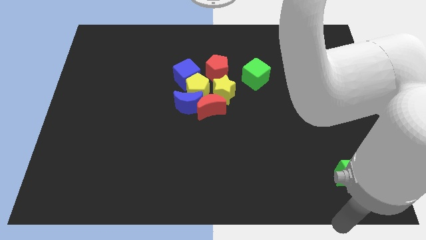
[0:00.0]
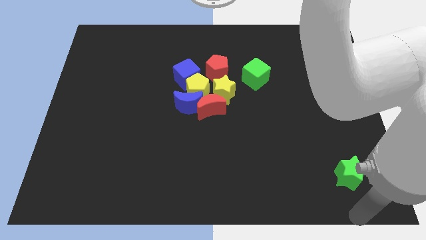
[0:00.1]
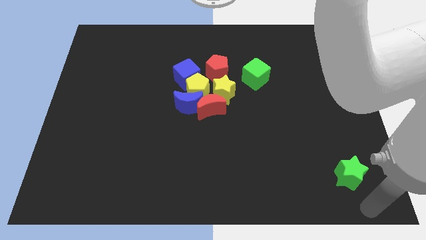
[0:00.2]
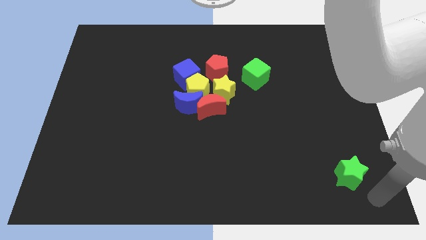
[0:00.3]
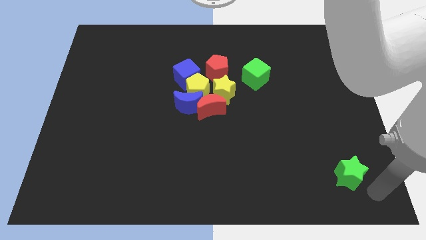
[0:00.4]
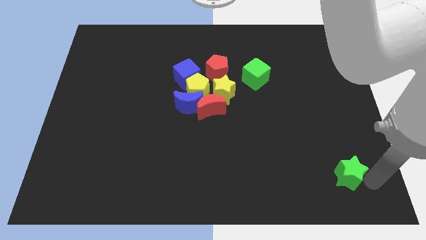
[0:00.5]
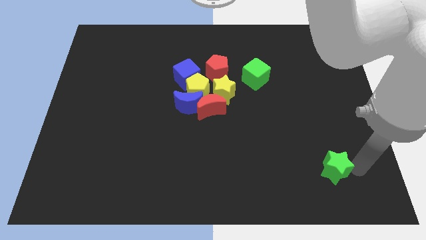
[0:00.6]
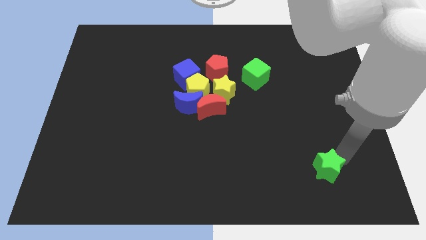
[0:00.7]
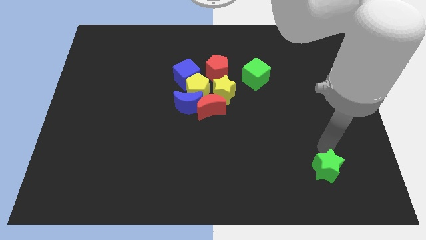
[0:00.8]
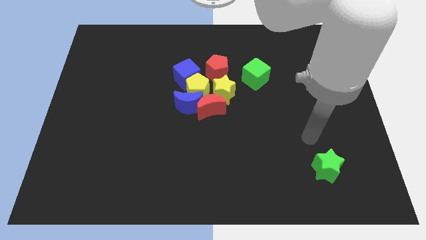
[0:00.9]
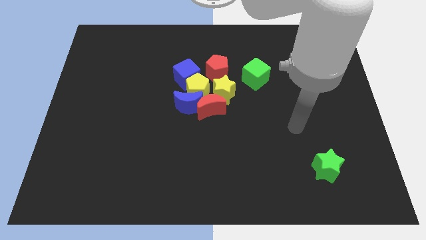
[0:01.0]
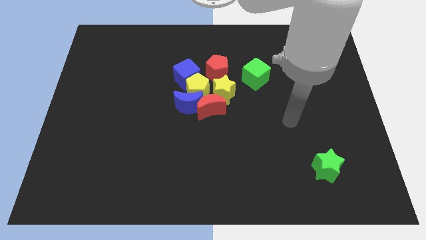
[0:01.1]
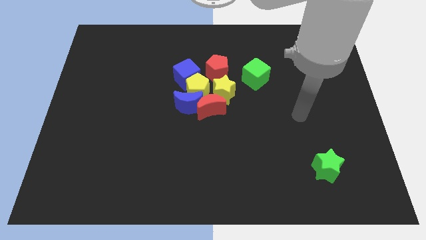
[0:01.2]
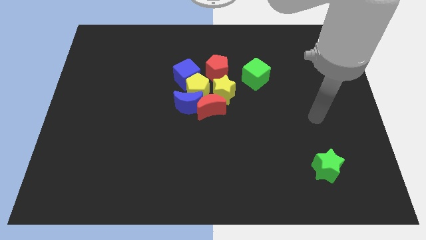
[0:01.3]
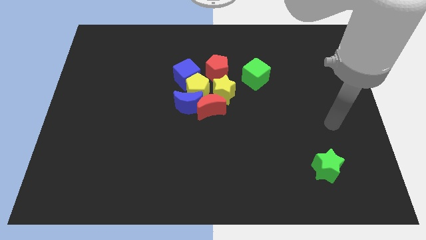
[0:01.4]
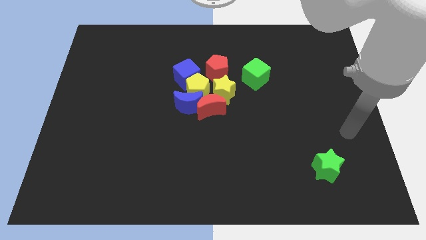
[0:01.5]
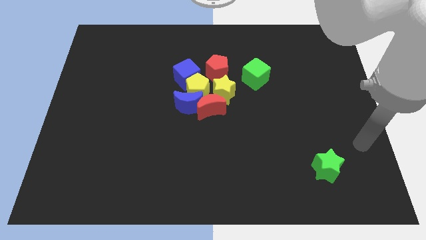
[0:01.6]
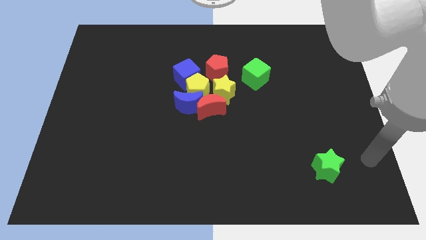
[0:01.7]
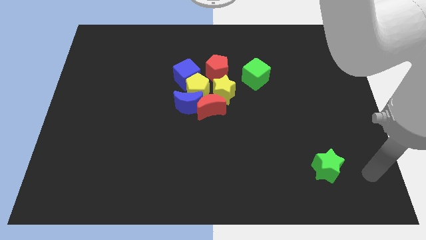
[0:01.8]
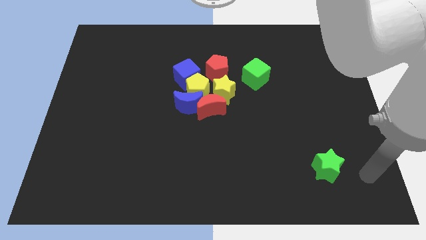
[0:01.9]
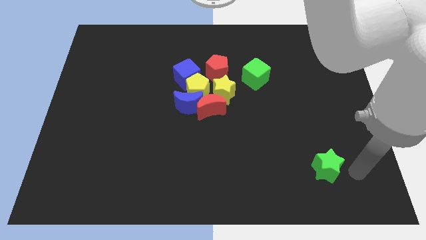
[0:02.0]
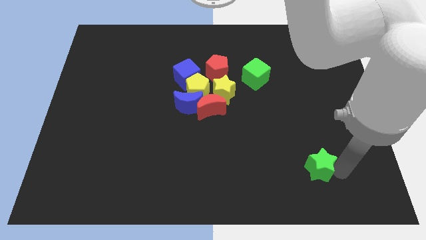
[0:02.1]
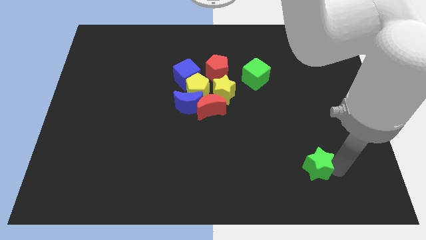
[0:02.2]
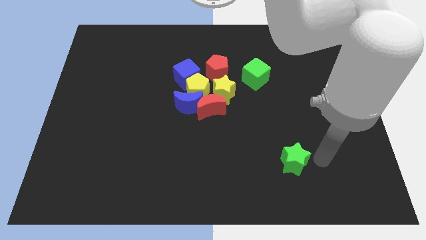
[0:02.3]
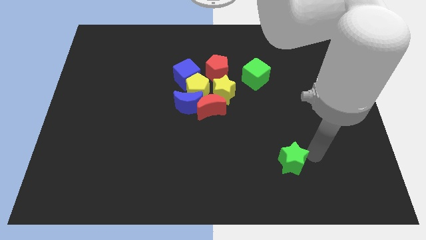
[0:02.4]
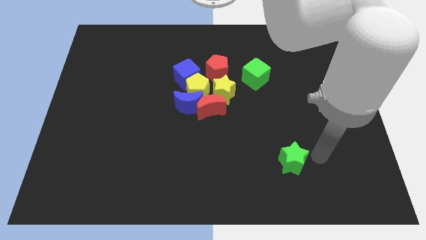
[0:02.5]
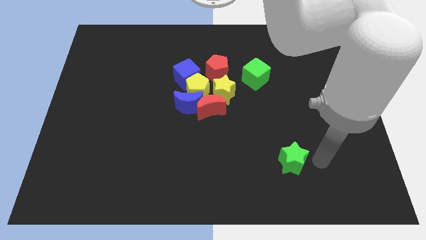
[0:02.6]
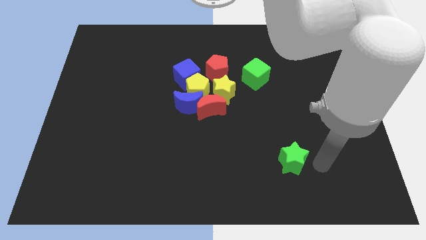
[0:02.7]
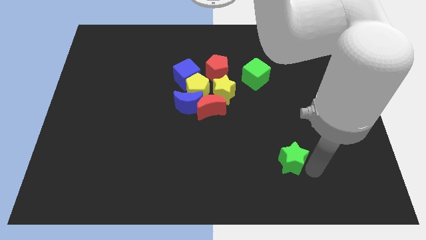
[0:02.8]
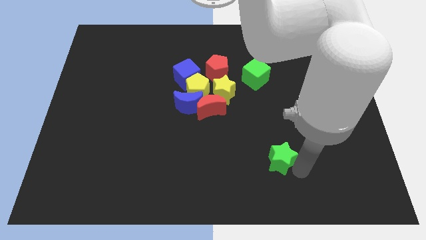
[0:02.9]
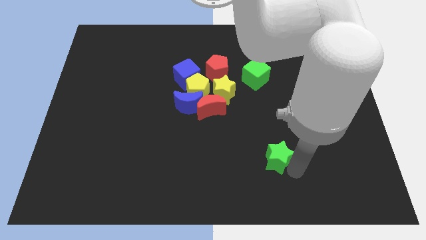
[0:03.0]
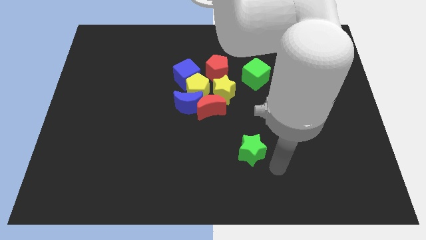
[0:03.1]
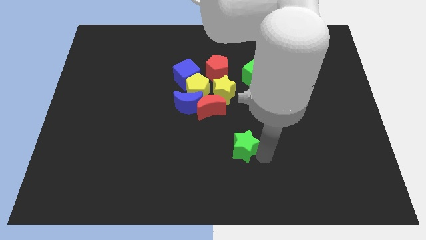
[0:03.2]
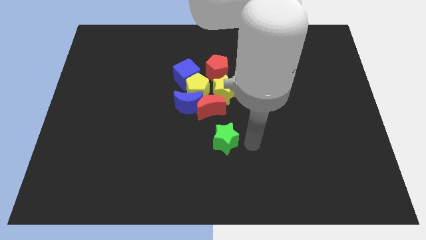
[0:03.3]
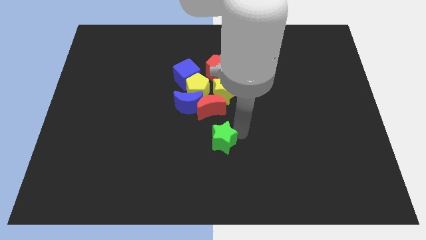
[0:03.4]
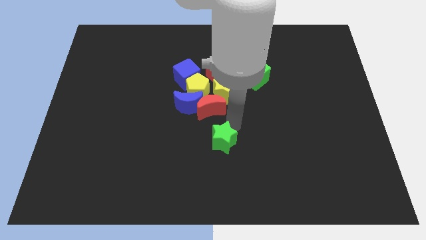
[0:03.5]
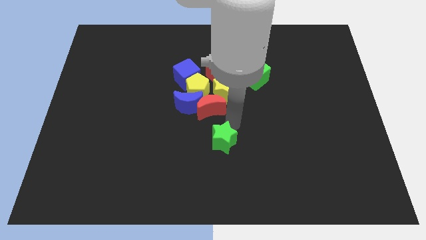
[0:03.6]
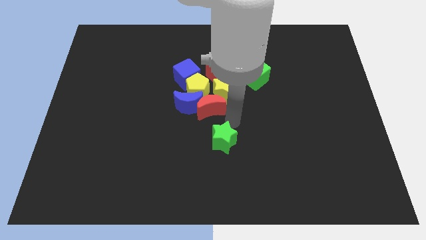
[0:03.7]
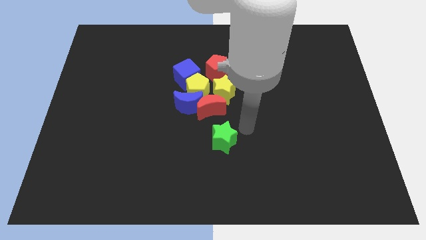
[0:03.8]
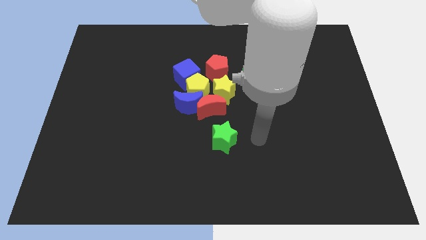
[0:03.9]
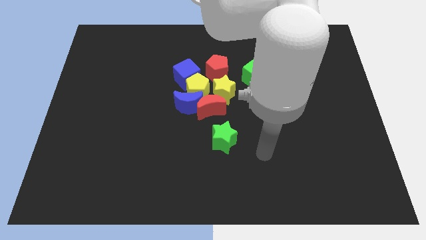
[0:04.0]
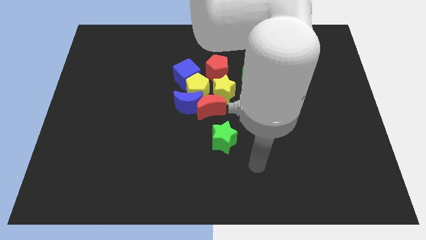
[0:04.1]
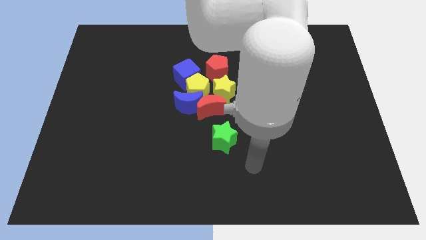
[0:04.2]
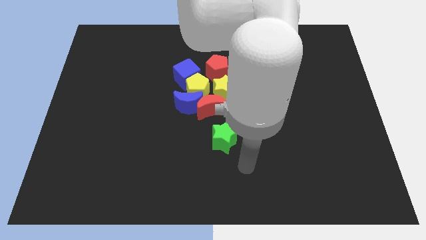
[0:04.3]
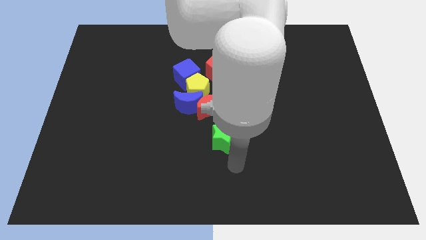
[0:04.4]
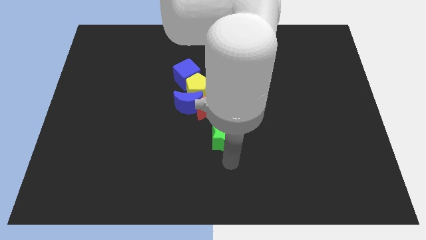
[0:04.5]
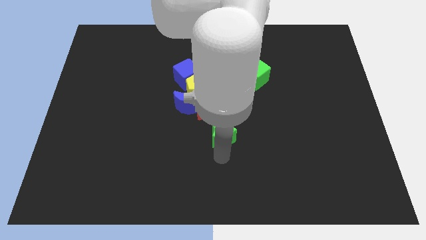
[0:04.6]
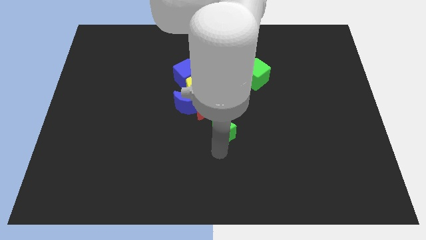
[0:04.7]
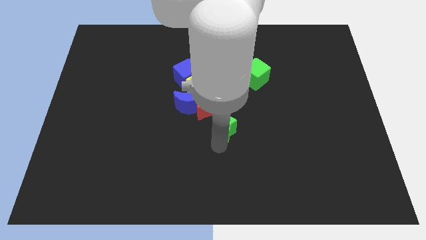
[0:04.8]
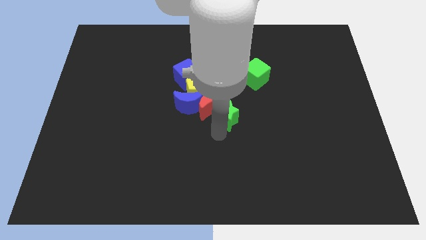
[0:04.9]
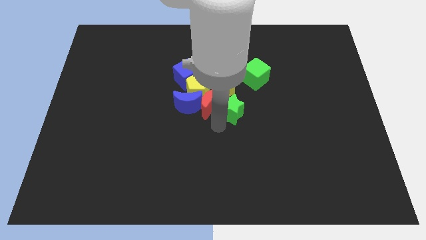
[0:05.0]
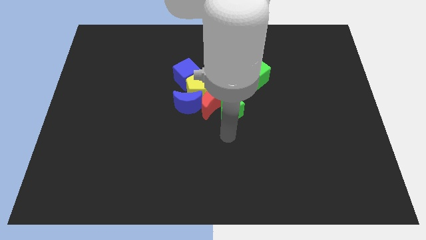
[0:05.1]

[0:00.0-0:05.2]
push the green star to the center of the board

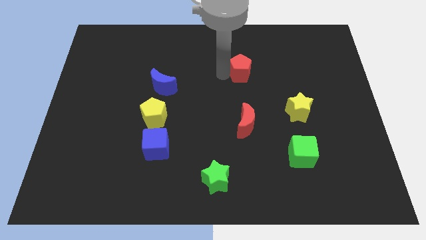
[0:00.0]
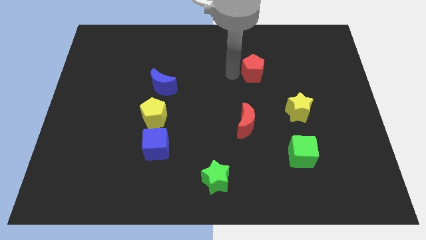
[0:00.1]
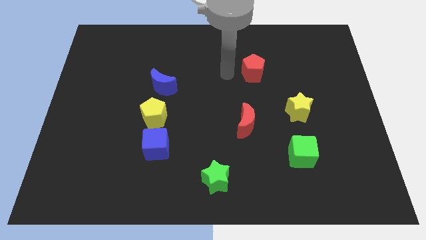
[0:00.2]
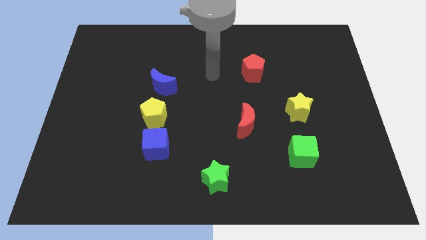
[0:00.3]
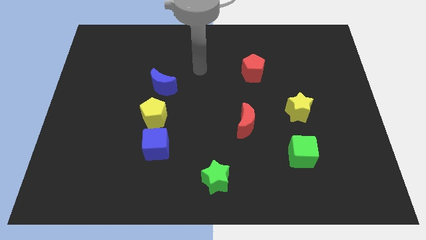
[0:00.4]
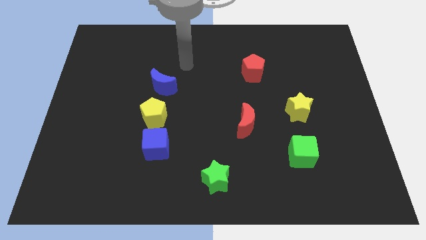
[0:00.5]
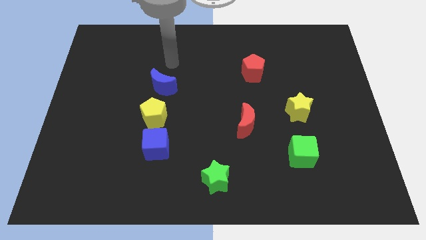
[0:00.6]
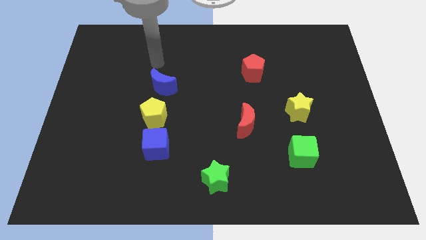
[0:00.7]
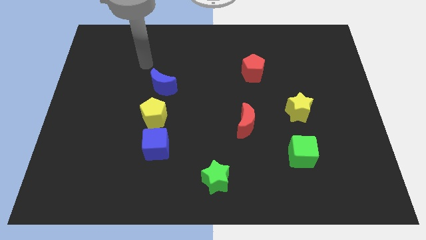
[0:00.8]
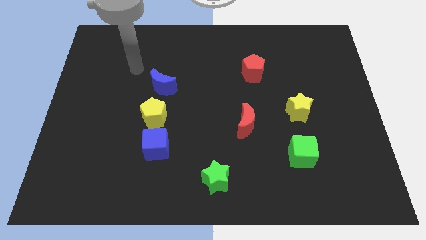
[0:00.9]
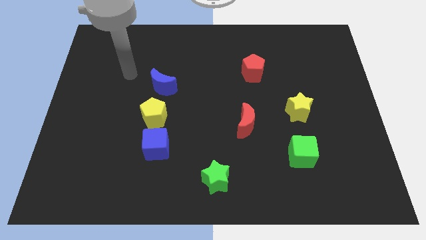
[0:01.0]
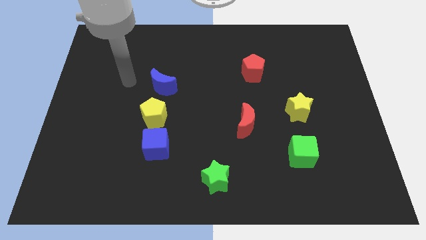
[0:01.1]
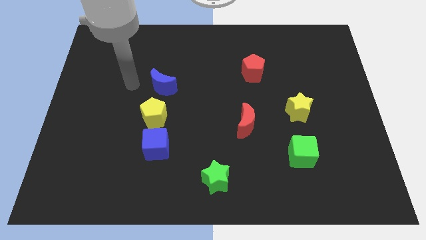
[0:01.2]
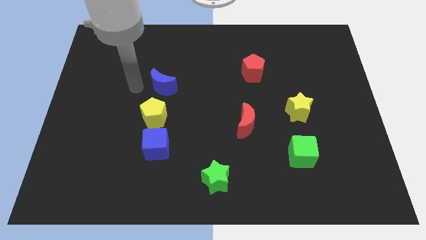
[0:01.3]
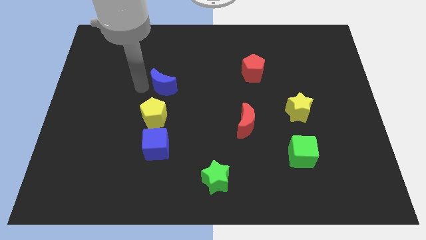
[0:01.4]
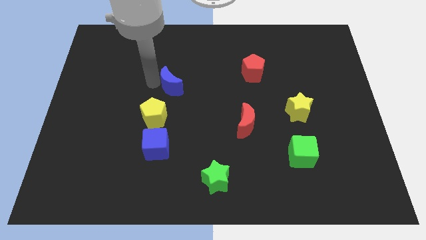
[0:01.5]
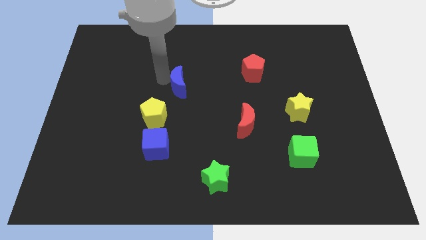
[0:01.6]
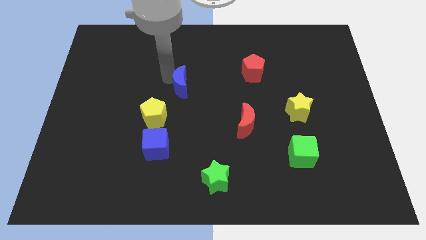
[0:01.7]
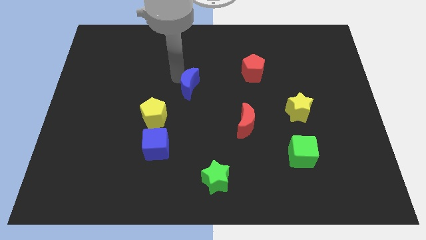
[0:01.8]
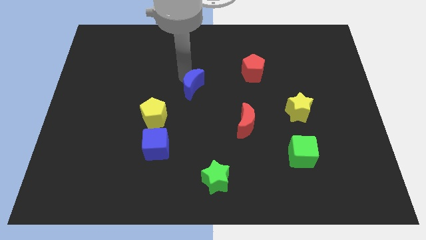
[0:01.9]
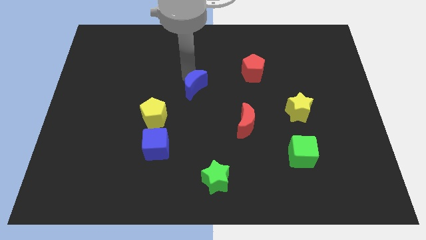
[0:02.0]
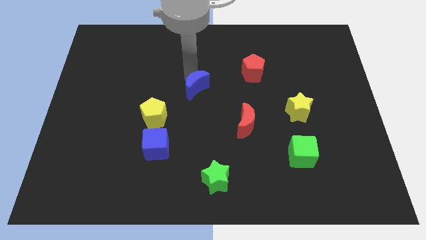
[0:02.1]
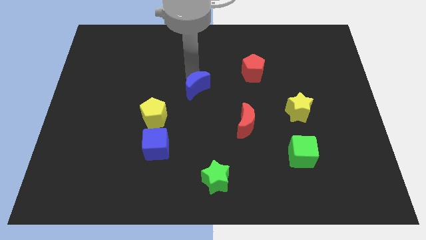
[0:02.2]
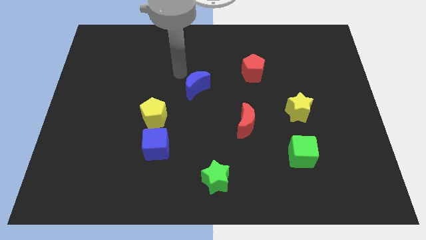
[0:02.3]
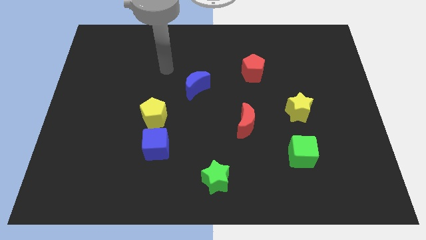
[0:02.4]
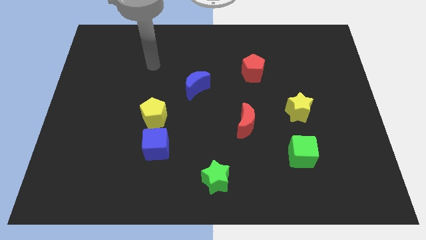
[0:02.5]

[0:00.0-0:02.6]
move the blue cube towards the red crescent

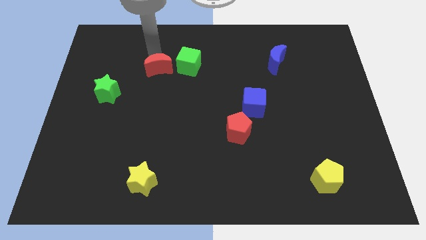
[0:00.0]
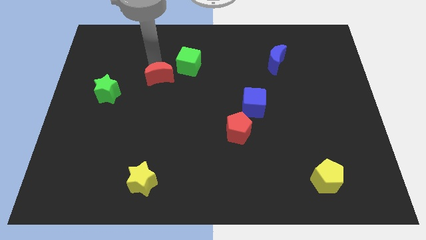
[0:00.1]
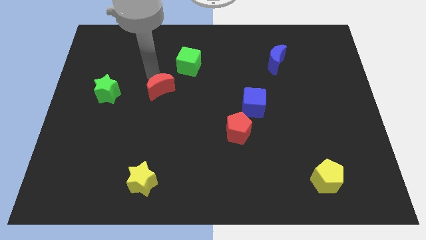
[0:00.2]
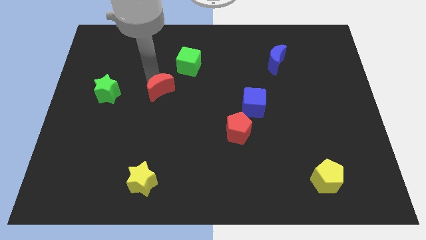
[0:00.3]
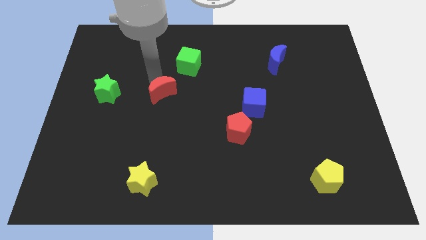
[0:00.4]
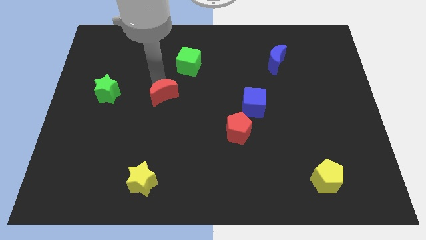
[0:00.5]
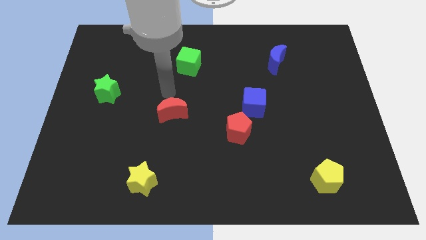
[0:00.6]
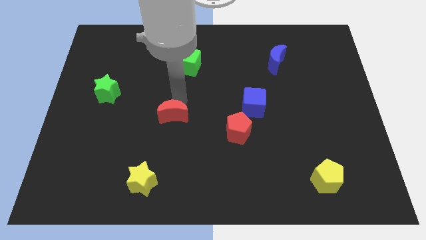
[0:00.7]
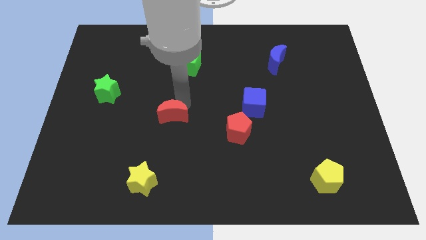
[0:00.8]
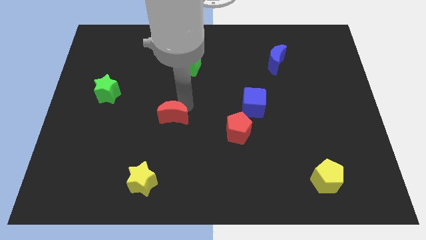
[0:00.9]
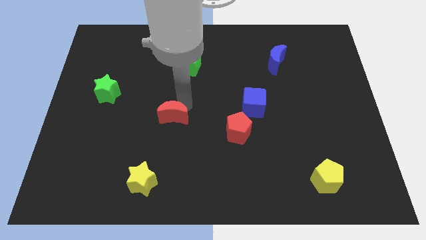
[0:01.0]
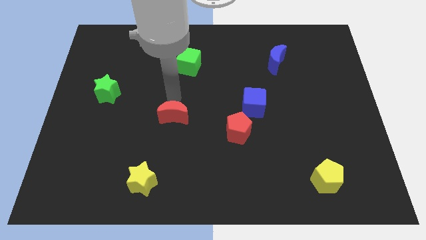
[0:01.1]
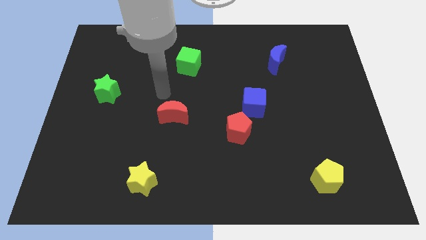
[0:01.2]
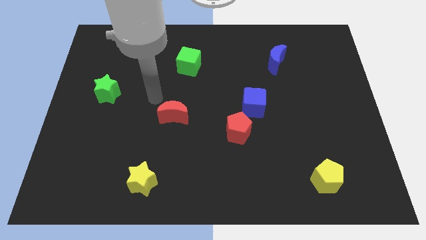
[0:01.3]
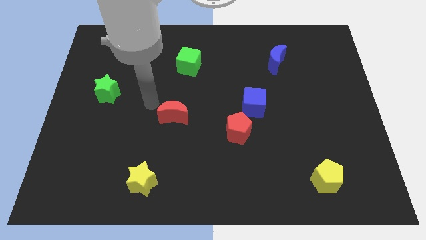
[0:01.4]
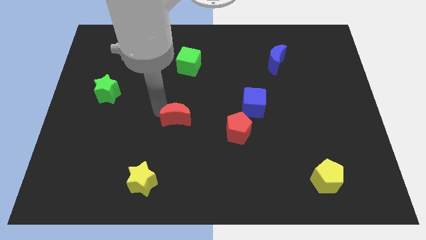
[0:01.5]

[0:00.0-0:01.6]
move the red crescent to left of red pentagon
